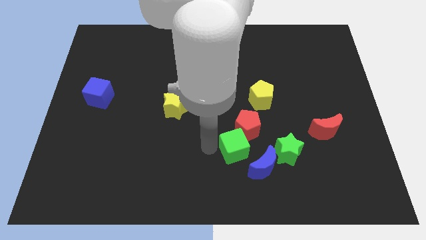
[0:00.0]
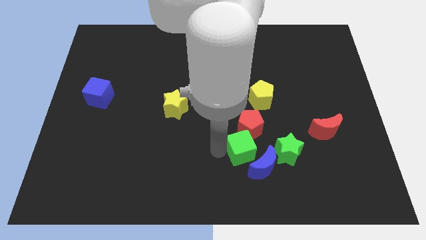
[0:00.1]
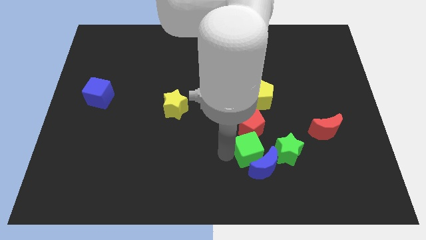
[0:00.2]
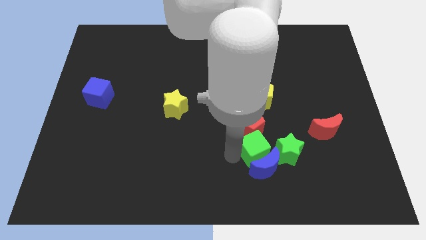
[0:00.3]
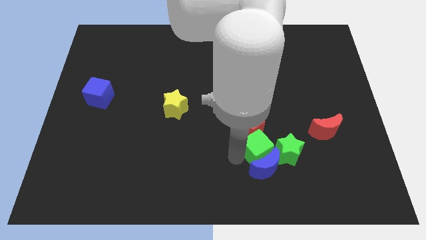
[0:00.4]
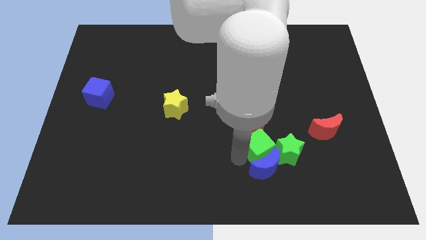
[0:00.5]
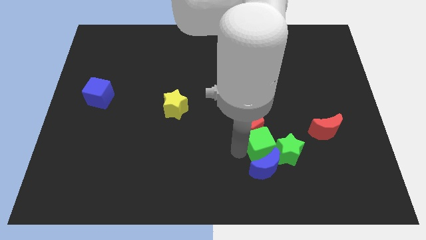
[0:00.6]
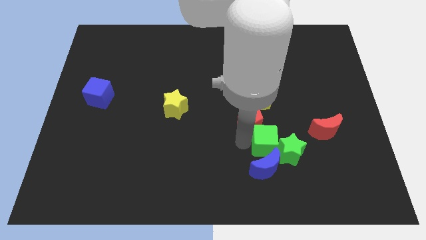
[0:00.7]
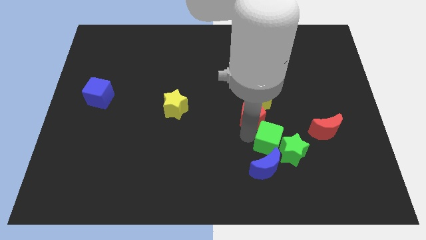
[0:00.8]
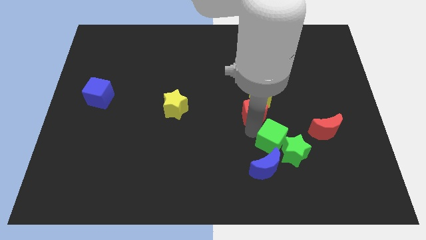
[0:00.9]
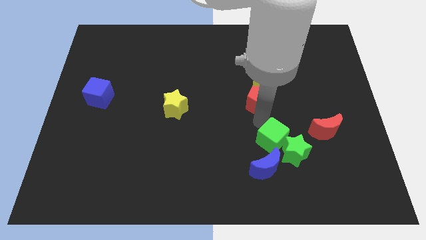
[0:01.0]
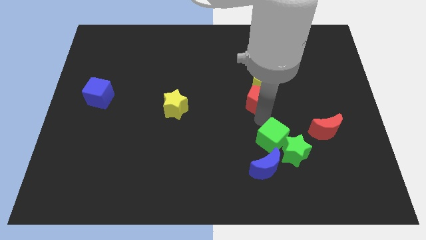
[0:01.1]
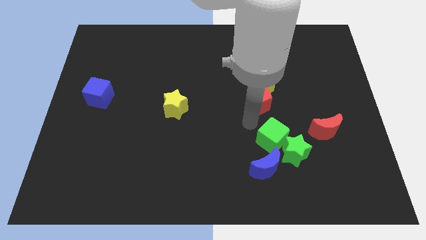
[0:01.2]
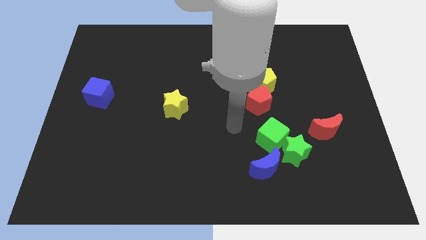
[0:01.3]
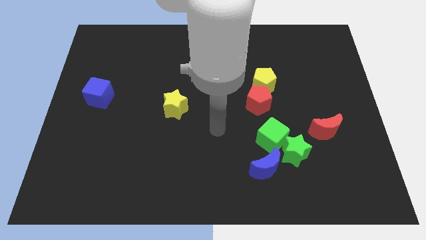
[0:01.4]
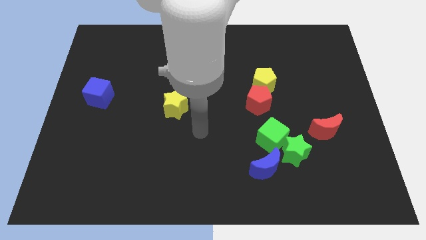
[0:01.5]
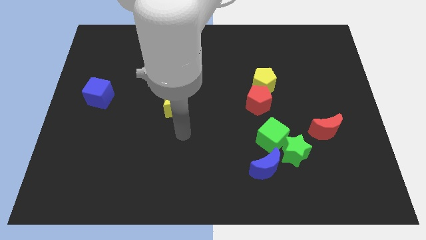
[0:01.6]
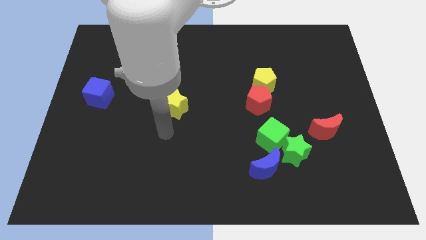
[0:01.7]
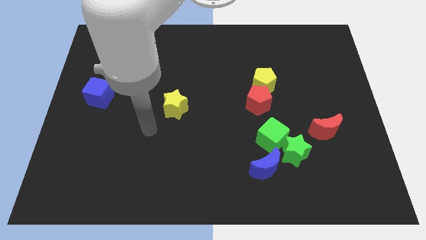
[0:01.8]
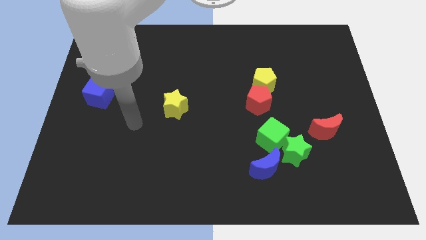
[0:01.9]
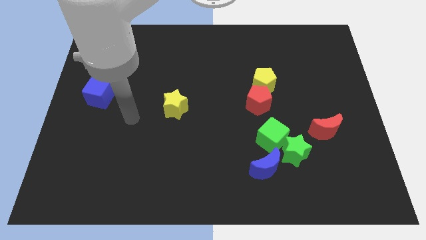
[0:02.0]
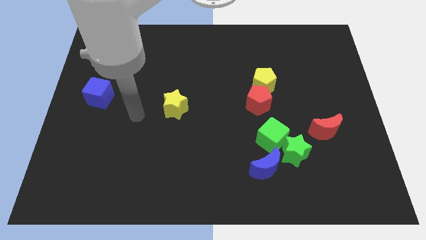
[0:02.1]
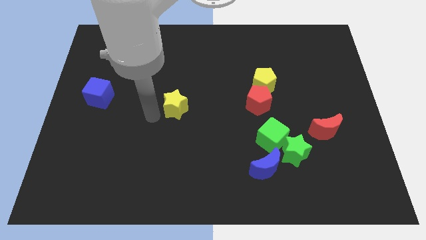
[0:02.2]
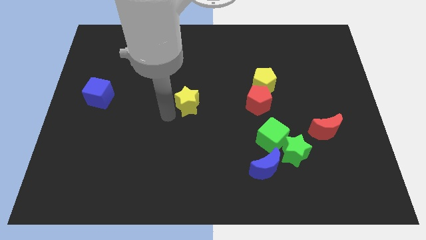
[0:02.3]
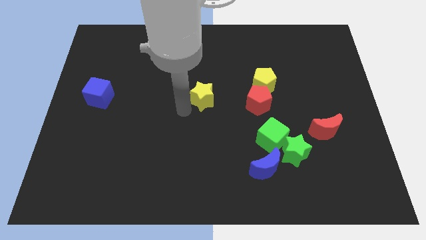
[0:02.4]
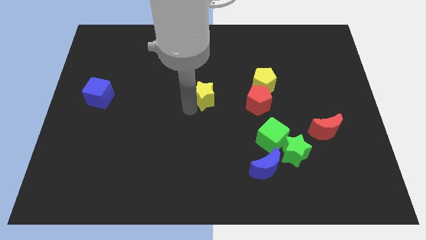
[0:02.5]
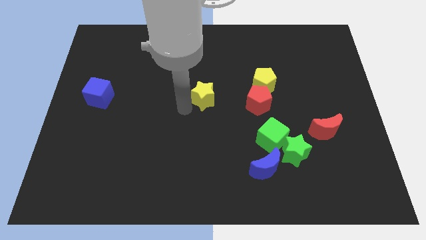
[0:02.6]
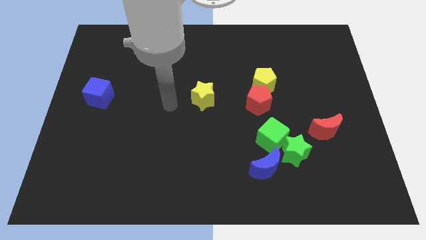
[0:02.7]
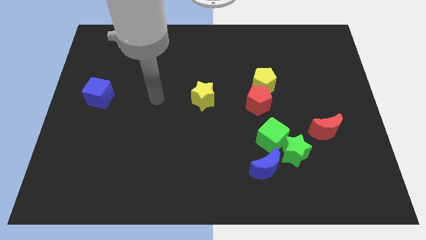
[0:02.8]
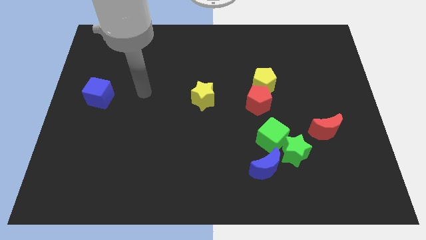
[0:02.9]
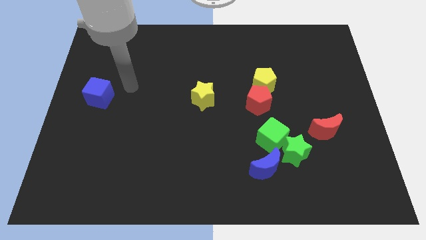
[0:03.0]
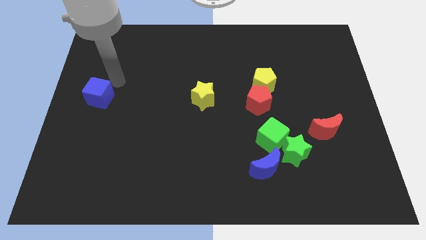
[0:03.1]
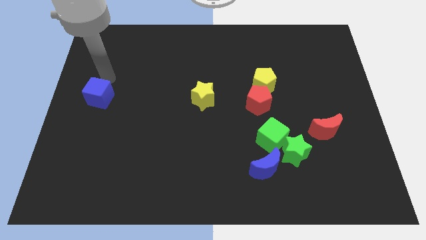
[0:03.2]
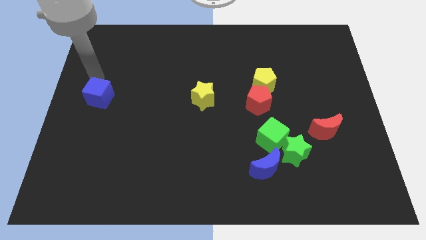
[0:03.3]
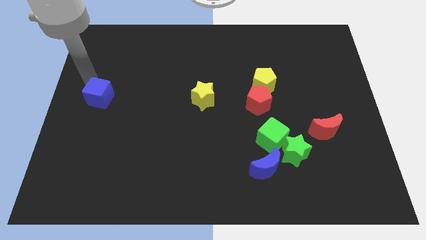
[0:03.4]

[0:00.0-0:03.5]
move the yellow star slightly right

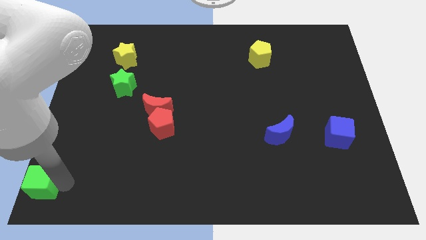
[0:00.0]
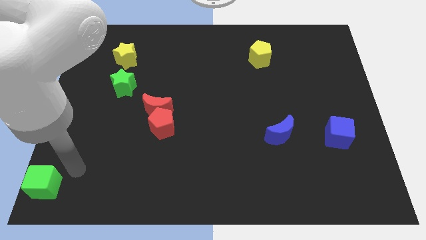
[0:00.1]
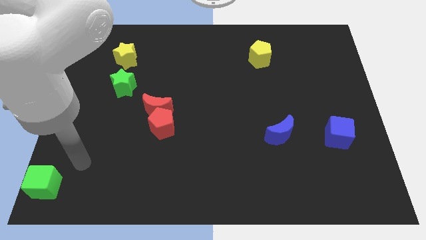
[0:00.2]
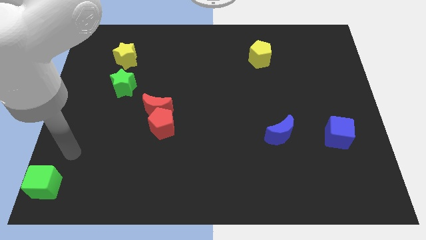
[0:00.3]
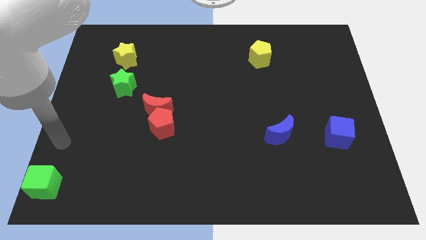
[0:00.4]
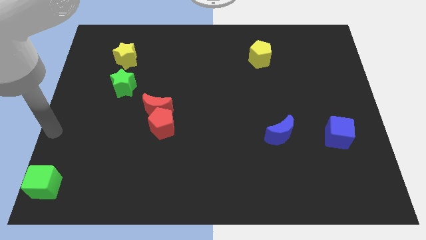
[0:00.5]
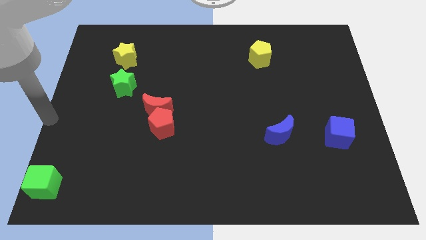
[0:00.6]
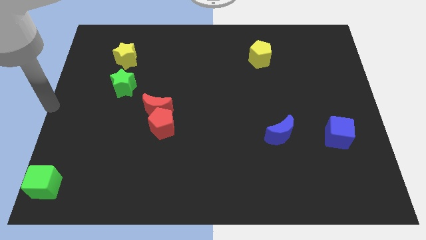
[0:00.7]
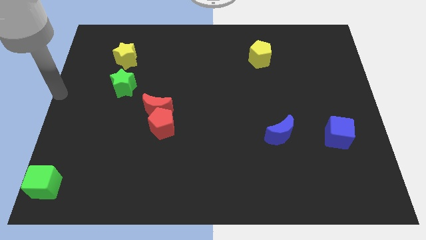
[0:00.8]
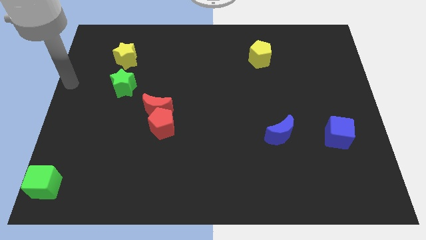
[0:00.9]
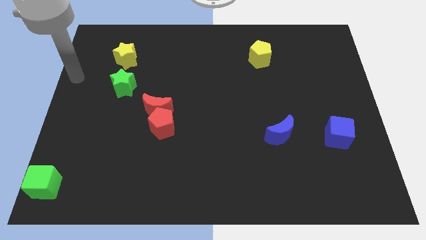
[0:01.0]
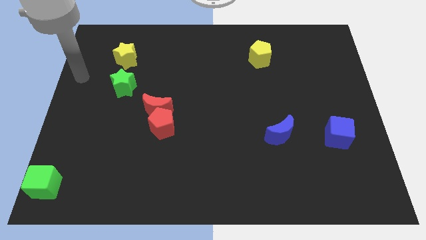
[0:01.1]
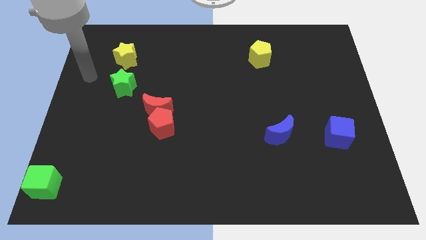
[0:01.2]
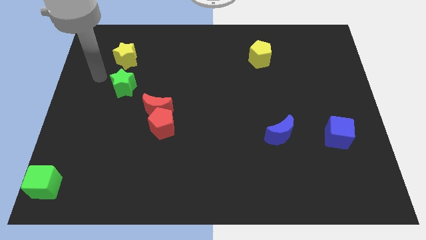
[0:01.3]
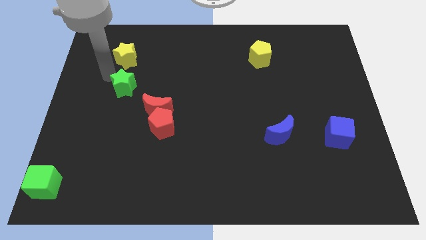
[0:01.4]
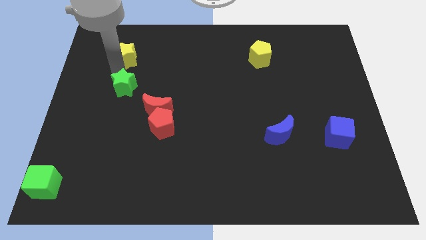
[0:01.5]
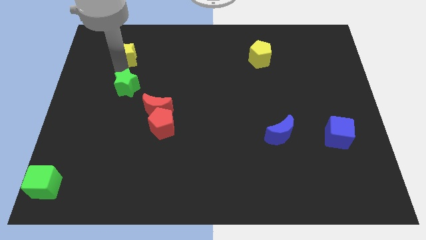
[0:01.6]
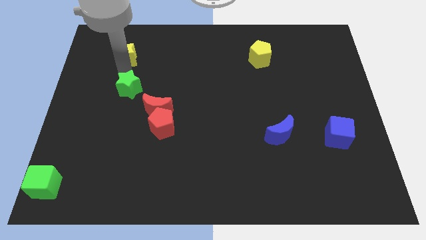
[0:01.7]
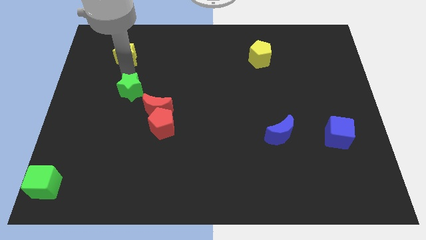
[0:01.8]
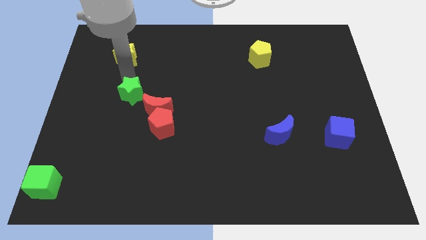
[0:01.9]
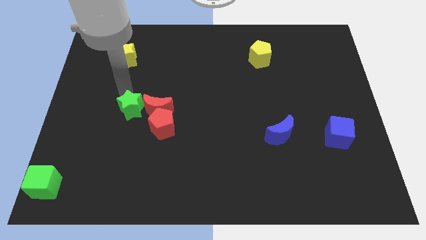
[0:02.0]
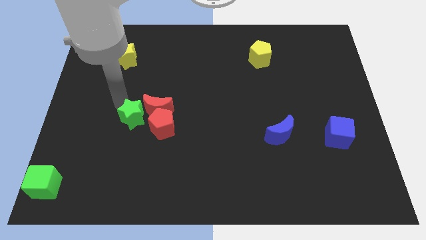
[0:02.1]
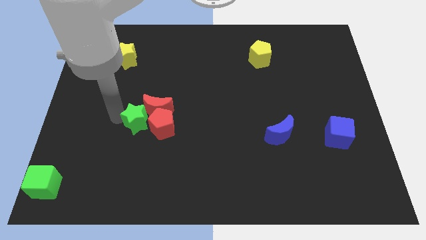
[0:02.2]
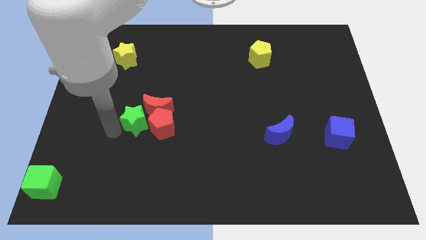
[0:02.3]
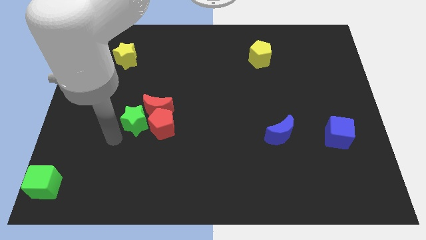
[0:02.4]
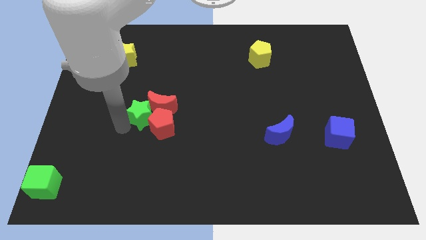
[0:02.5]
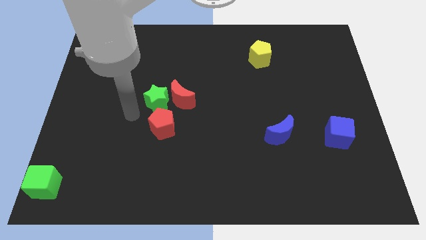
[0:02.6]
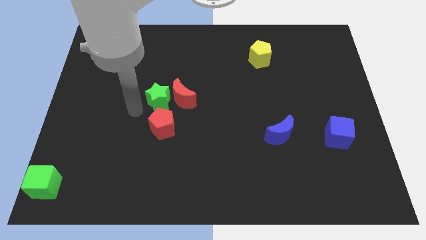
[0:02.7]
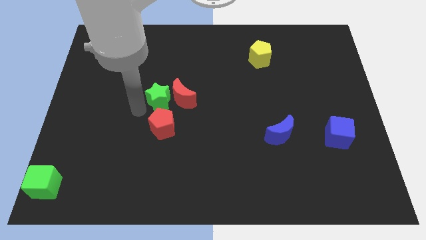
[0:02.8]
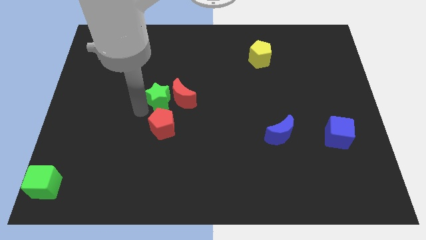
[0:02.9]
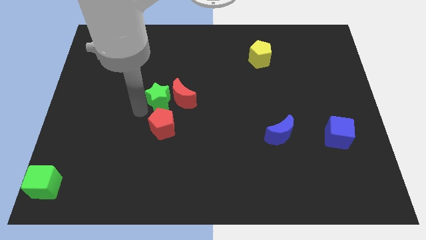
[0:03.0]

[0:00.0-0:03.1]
push the green star to bottom left of red crescent

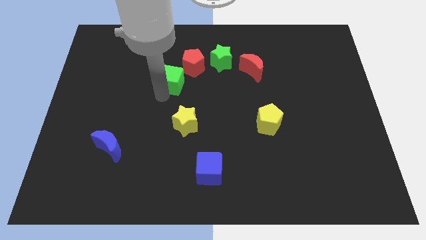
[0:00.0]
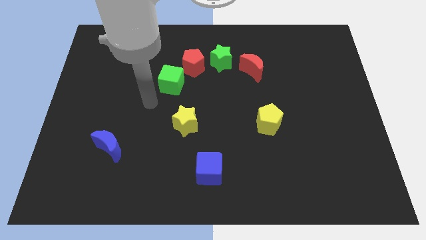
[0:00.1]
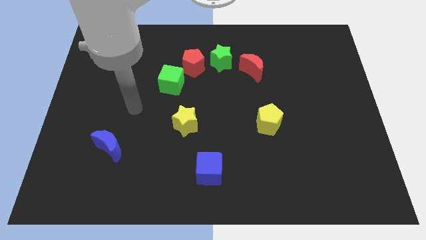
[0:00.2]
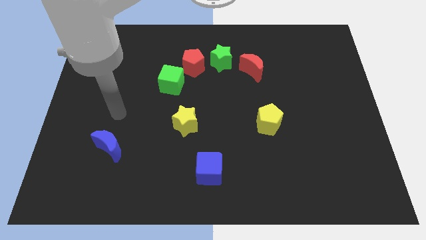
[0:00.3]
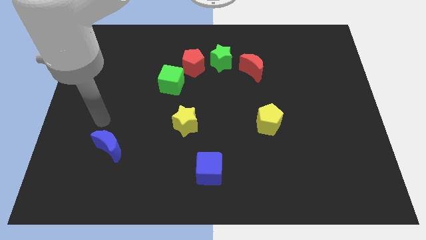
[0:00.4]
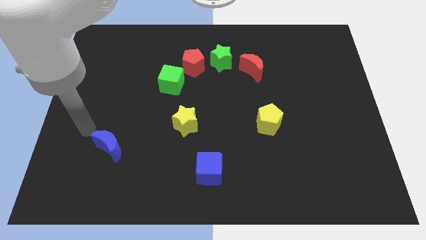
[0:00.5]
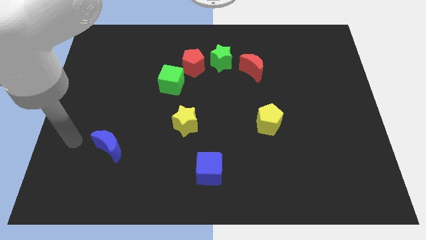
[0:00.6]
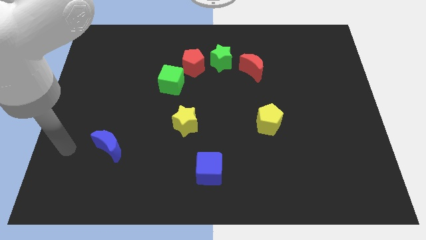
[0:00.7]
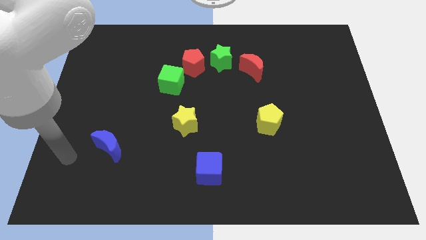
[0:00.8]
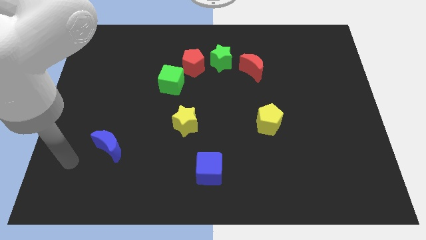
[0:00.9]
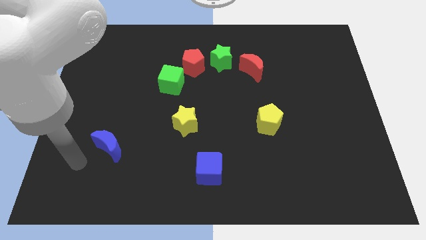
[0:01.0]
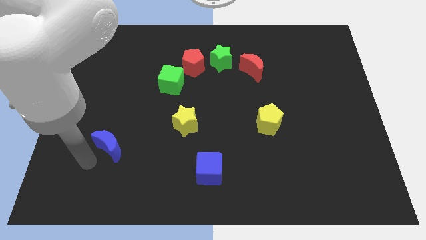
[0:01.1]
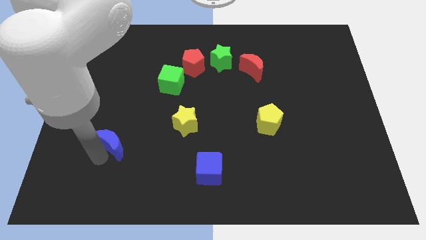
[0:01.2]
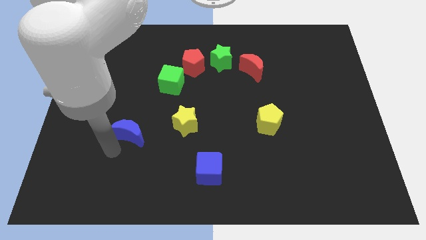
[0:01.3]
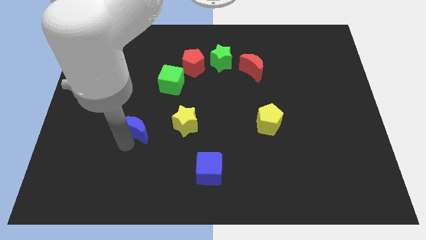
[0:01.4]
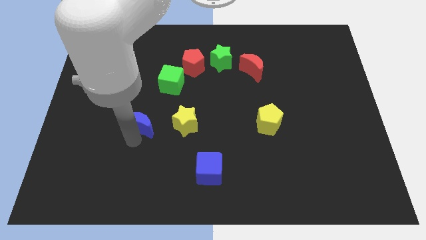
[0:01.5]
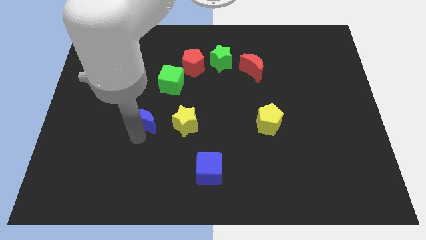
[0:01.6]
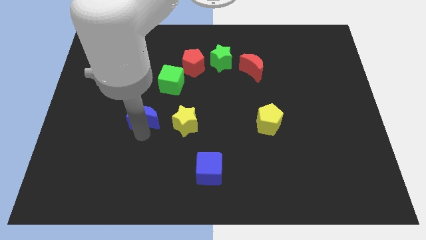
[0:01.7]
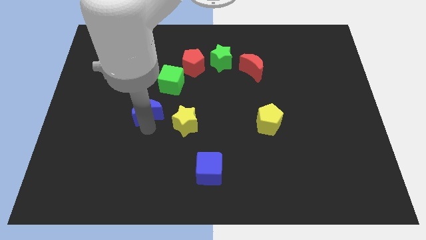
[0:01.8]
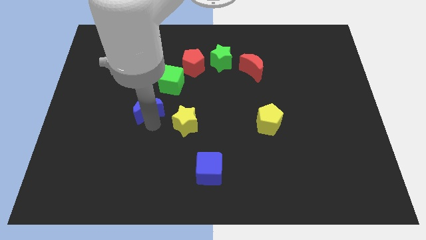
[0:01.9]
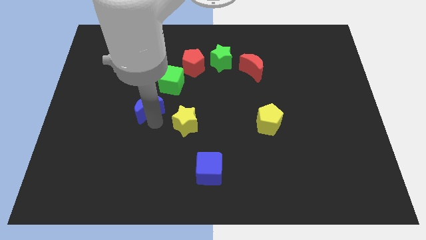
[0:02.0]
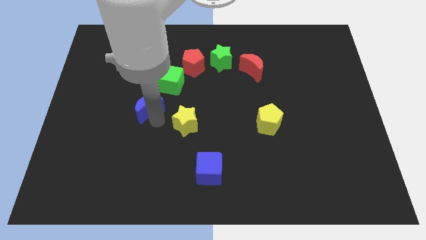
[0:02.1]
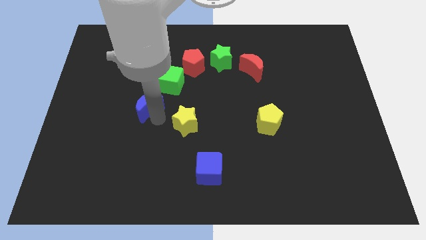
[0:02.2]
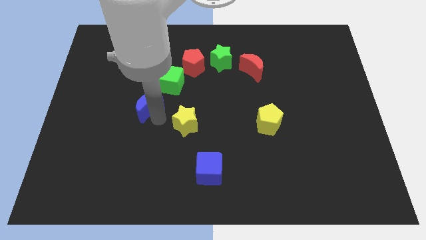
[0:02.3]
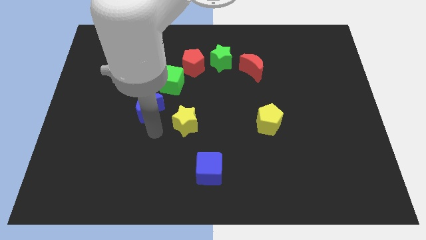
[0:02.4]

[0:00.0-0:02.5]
place the blue moon to the bottom of the green cube
